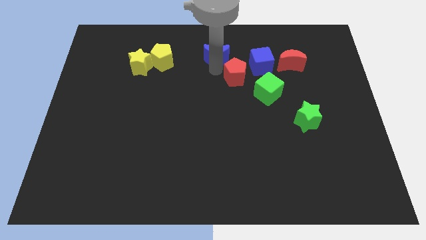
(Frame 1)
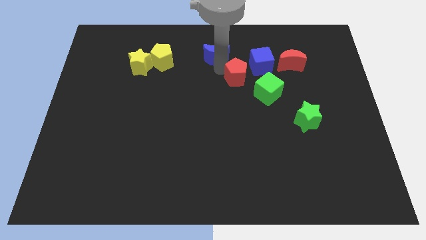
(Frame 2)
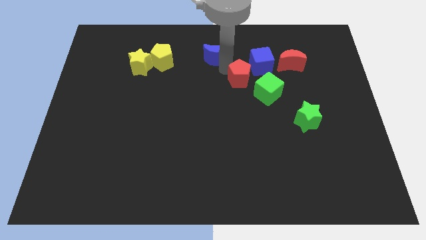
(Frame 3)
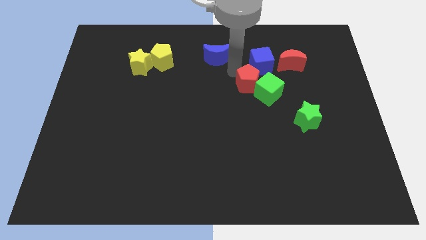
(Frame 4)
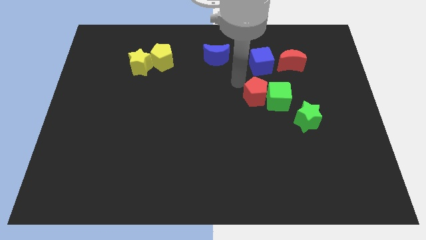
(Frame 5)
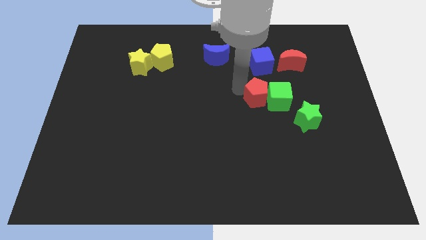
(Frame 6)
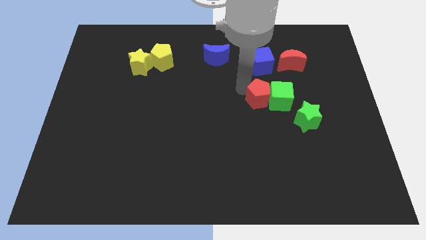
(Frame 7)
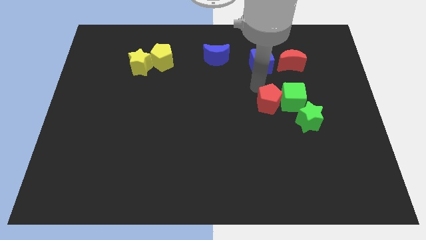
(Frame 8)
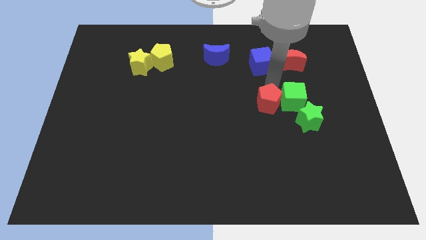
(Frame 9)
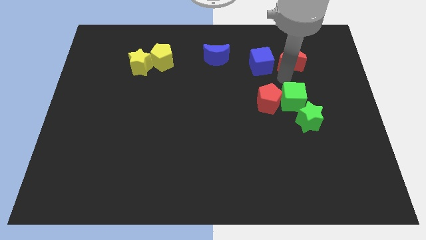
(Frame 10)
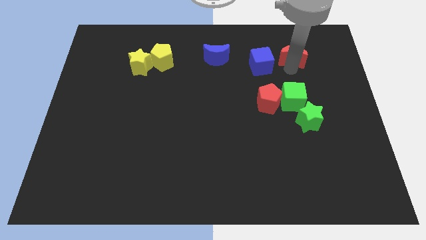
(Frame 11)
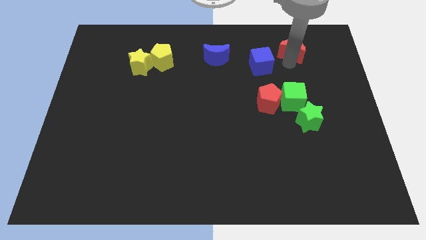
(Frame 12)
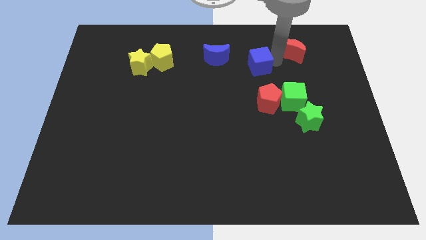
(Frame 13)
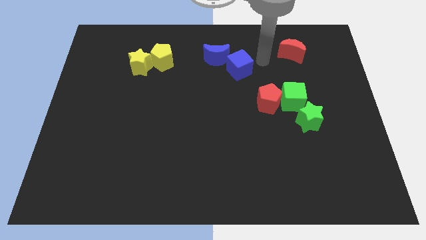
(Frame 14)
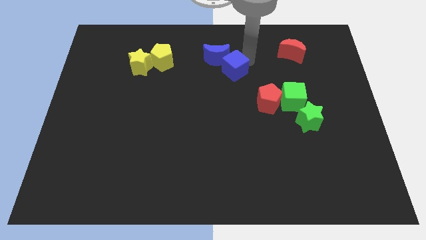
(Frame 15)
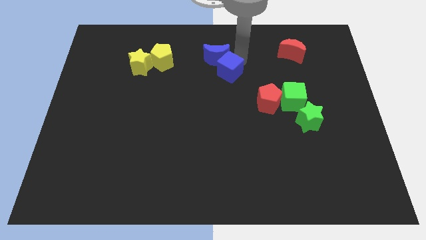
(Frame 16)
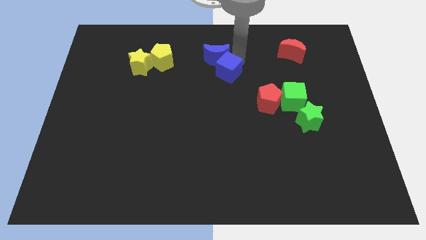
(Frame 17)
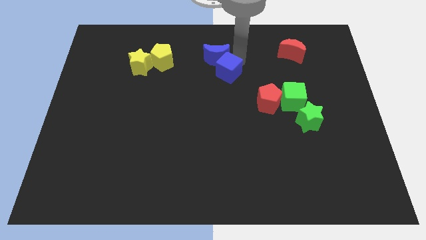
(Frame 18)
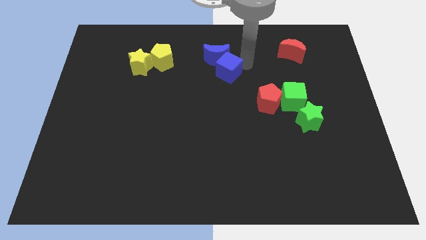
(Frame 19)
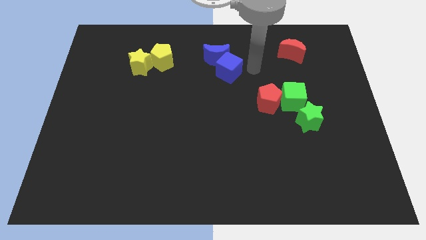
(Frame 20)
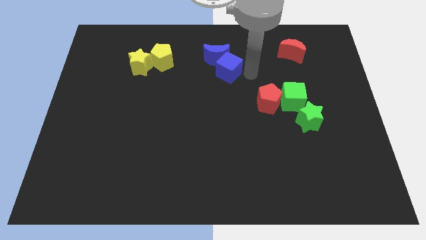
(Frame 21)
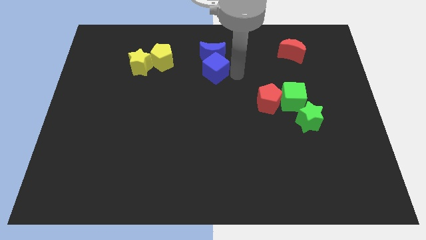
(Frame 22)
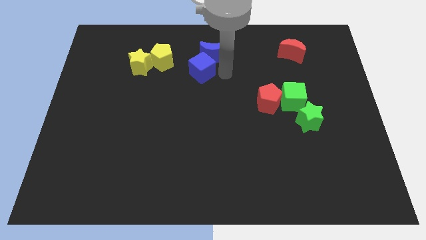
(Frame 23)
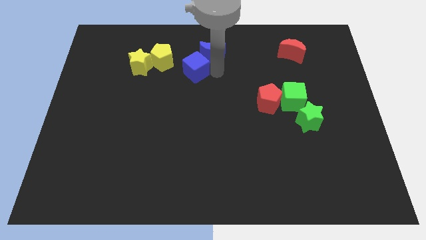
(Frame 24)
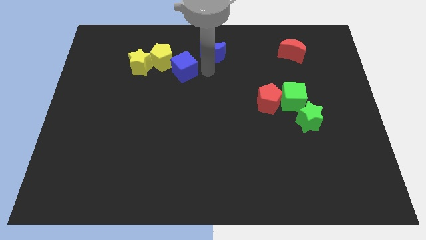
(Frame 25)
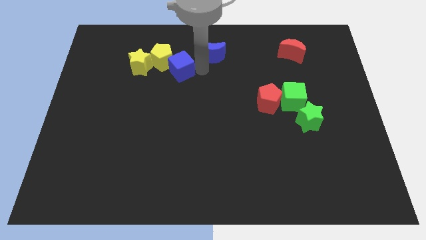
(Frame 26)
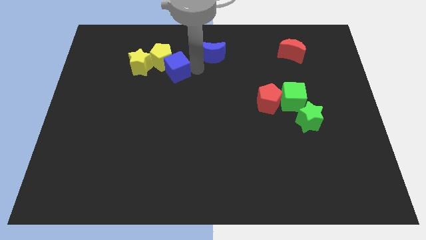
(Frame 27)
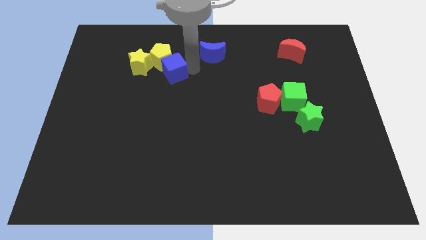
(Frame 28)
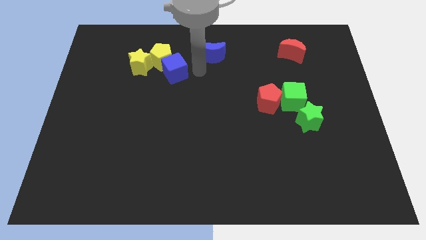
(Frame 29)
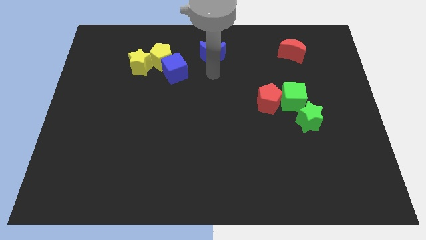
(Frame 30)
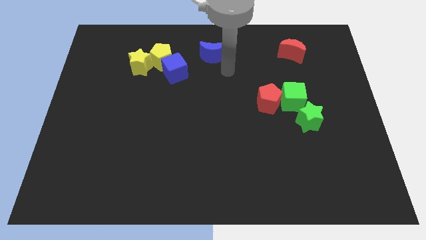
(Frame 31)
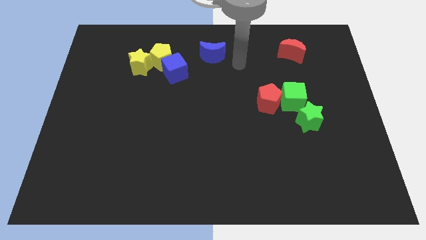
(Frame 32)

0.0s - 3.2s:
separate the blue cube from red moon and blue cube into the yellow pentagon

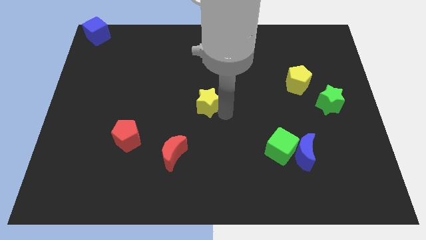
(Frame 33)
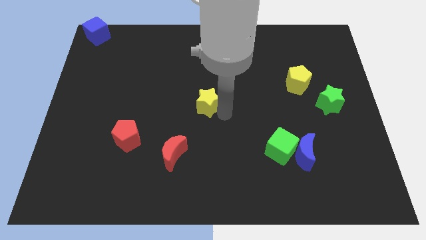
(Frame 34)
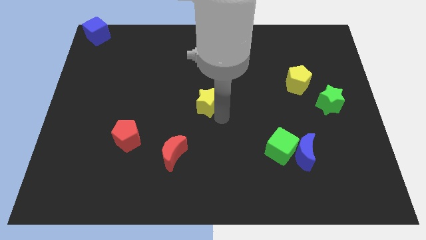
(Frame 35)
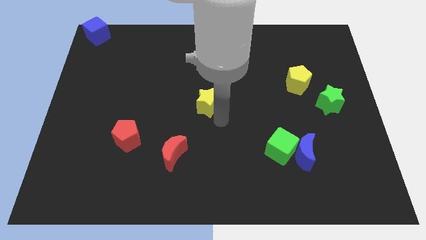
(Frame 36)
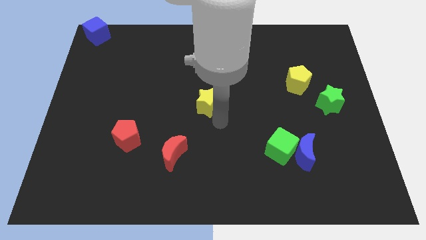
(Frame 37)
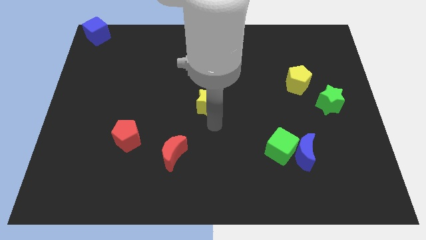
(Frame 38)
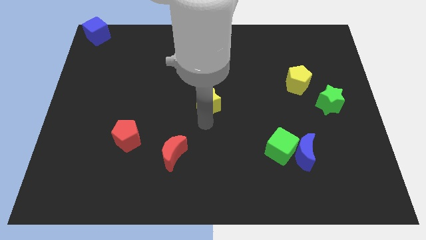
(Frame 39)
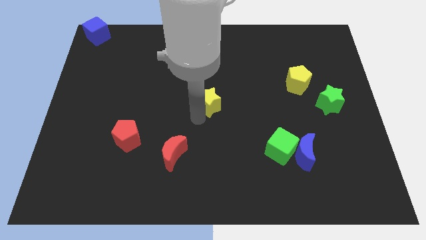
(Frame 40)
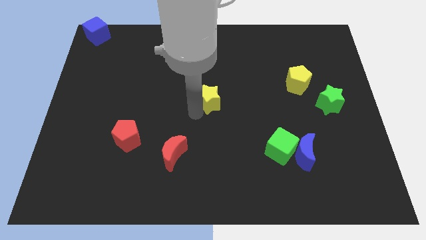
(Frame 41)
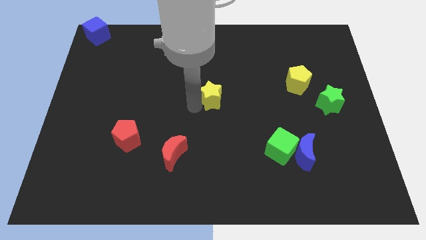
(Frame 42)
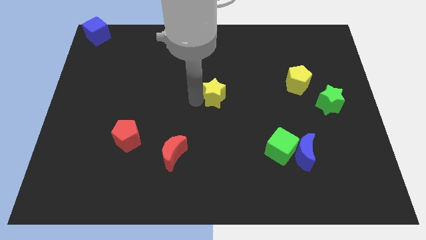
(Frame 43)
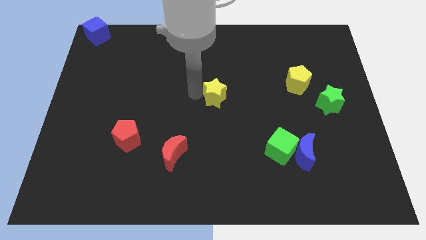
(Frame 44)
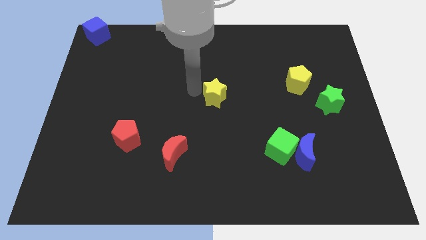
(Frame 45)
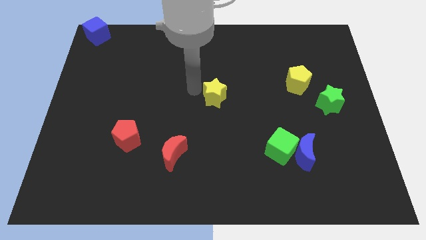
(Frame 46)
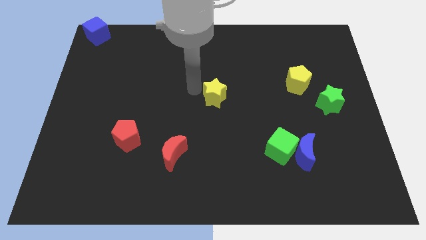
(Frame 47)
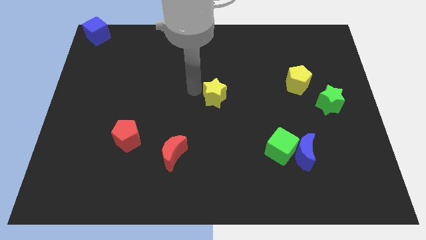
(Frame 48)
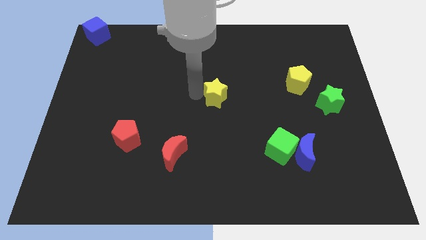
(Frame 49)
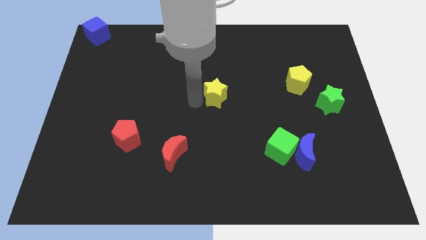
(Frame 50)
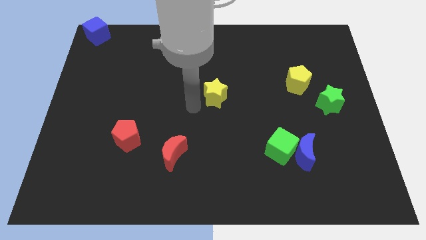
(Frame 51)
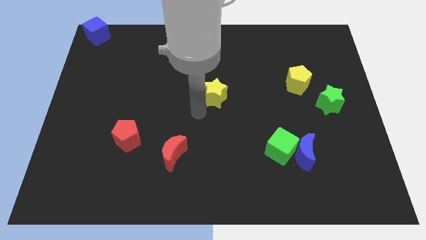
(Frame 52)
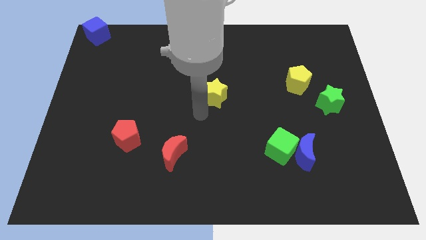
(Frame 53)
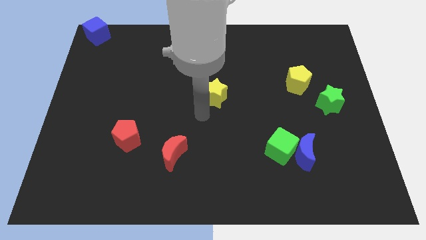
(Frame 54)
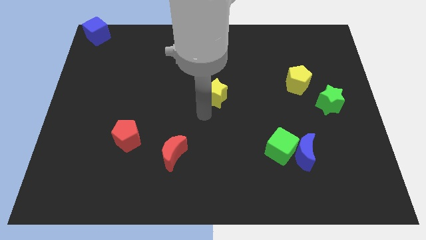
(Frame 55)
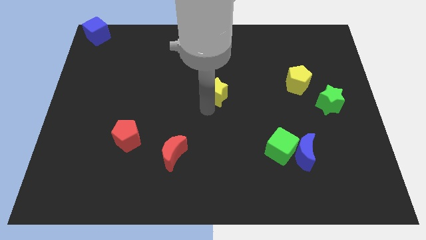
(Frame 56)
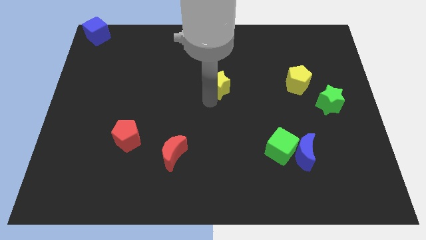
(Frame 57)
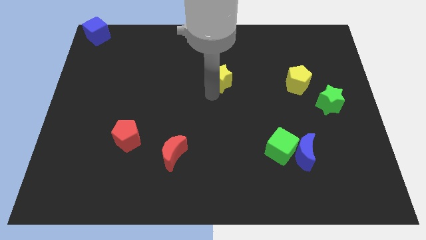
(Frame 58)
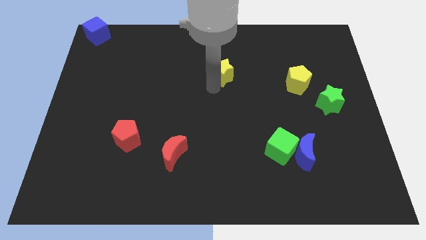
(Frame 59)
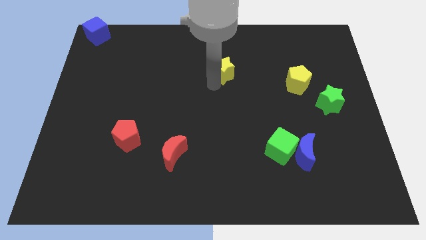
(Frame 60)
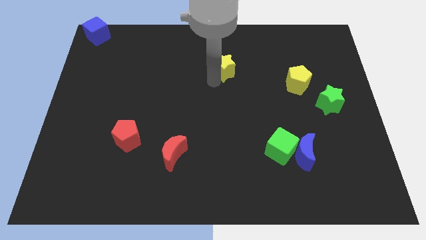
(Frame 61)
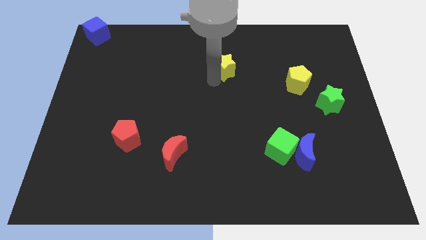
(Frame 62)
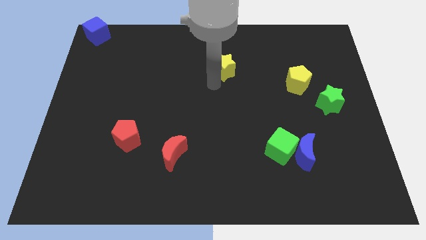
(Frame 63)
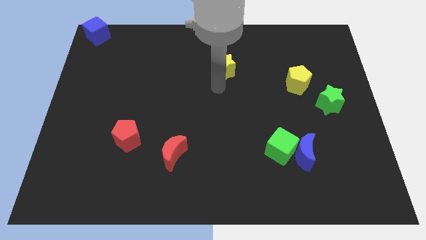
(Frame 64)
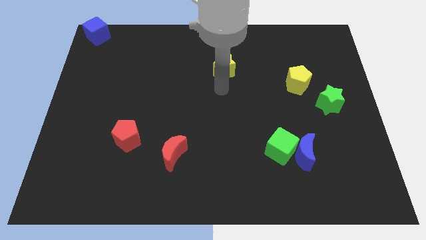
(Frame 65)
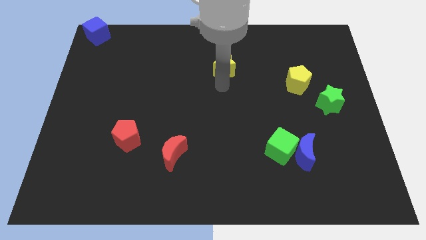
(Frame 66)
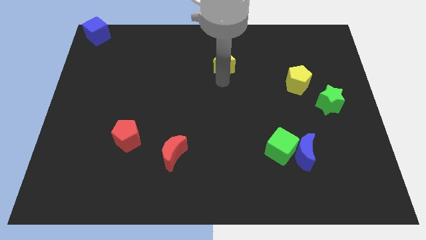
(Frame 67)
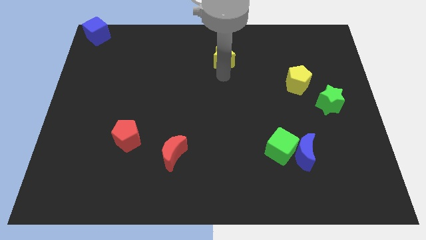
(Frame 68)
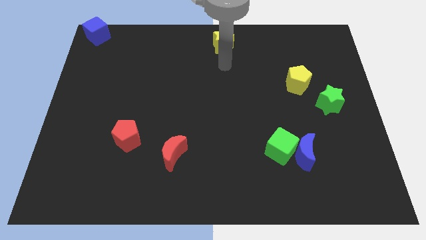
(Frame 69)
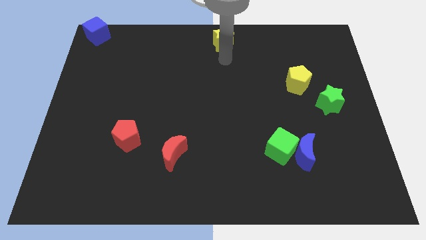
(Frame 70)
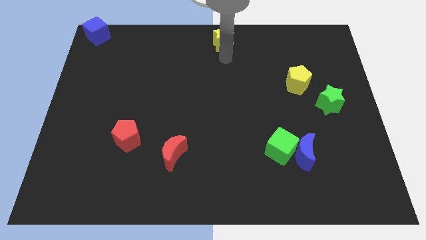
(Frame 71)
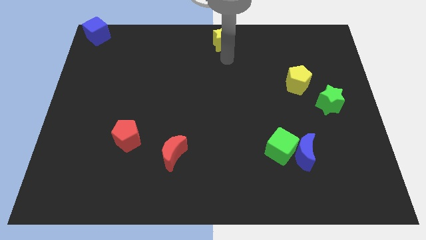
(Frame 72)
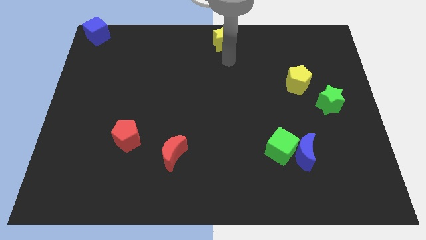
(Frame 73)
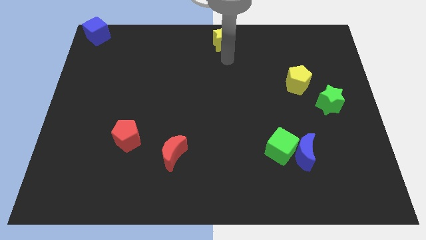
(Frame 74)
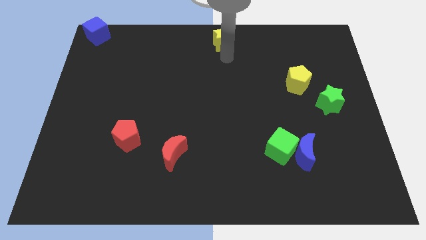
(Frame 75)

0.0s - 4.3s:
drag the yellow star to the top center of the board

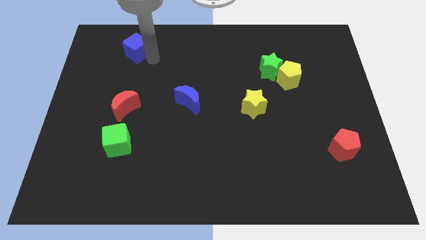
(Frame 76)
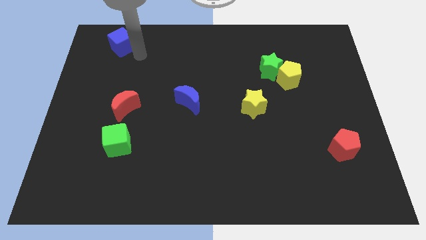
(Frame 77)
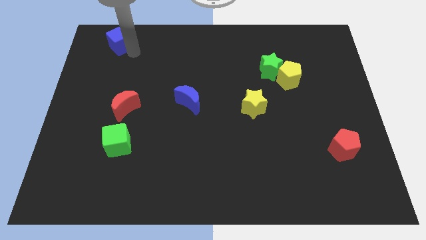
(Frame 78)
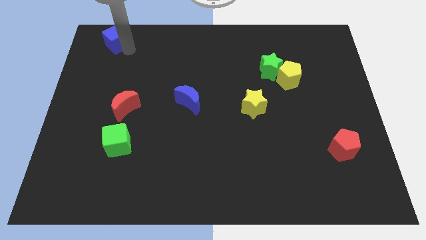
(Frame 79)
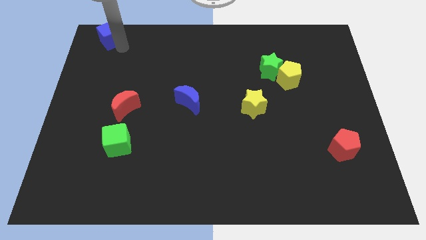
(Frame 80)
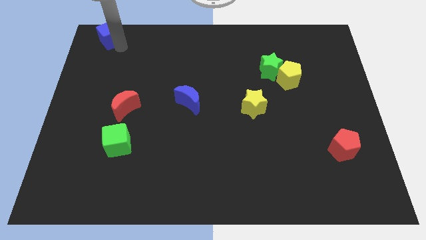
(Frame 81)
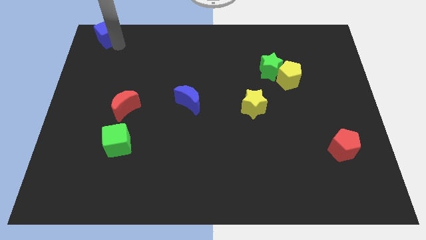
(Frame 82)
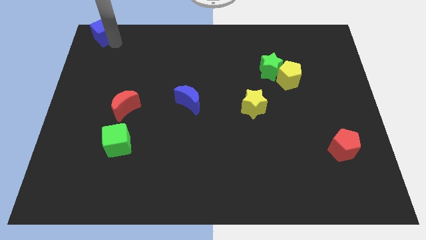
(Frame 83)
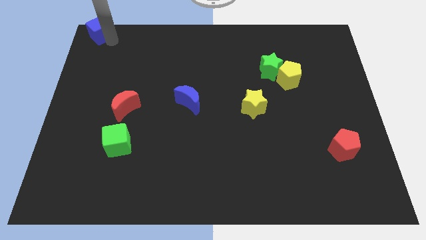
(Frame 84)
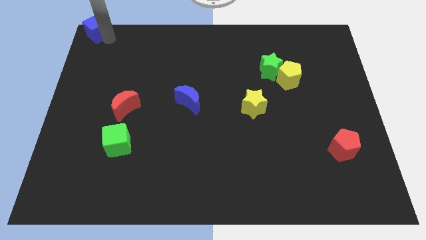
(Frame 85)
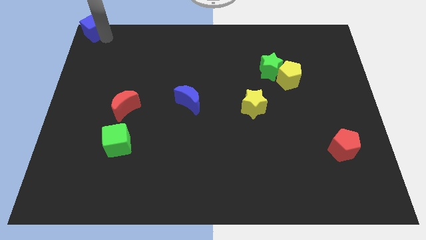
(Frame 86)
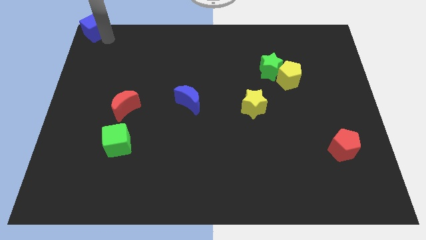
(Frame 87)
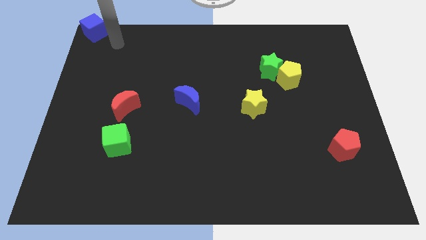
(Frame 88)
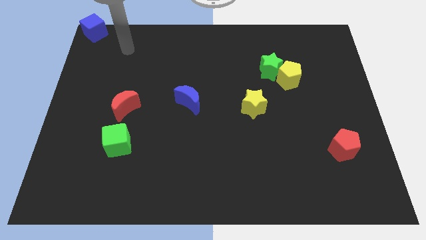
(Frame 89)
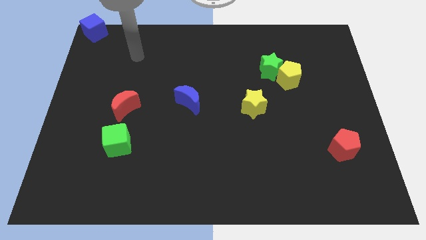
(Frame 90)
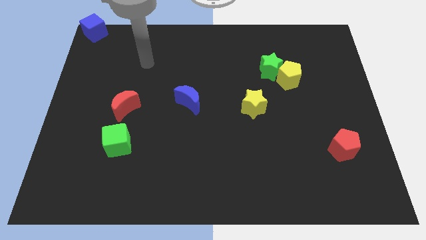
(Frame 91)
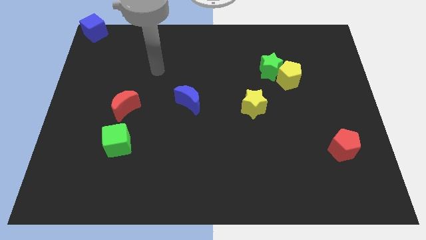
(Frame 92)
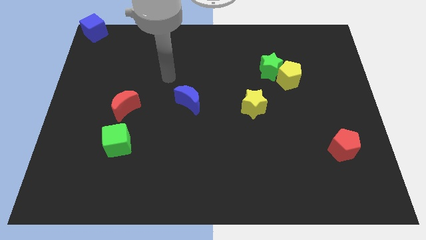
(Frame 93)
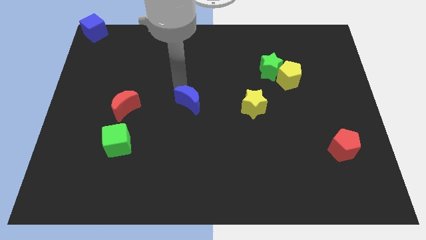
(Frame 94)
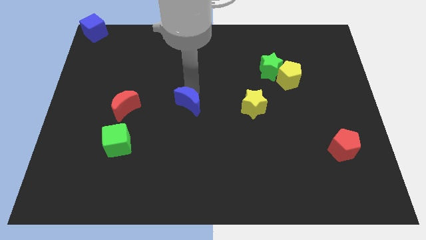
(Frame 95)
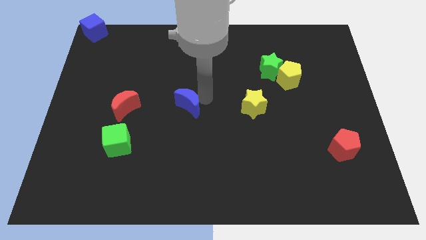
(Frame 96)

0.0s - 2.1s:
move the blue cube to the top left corner of the board
